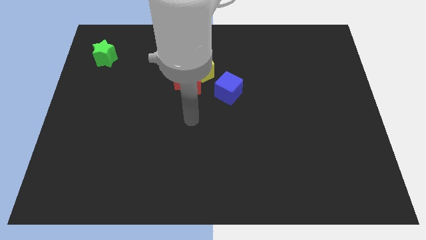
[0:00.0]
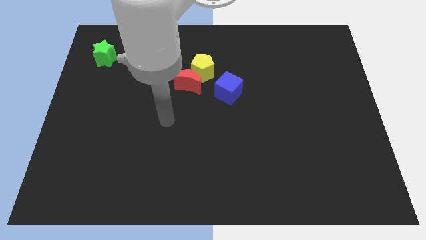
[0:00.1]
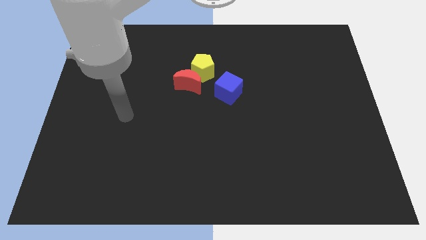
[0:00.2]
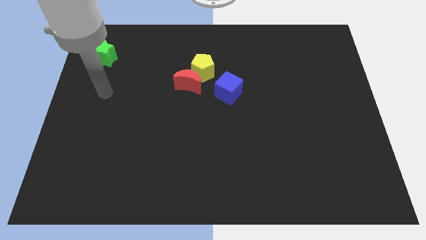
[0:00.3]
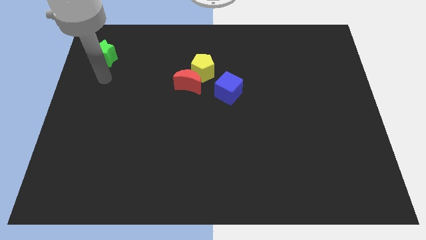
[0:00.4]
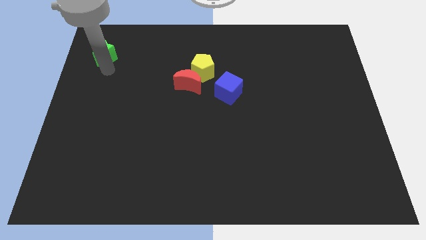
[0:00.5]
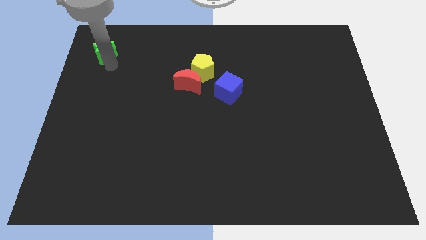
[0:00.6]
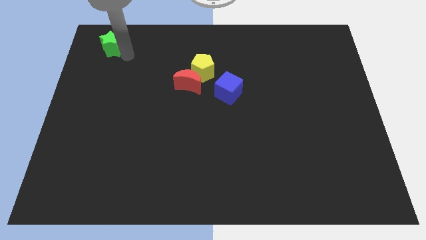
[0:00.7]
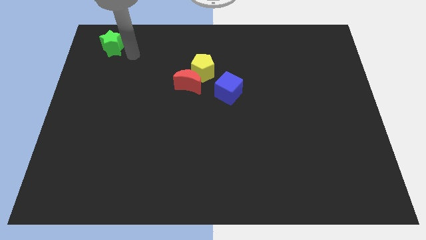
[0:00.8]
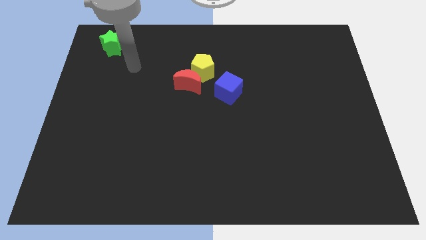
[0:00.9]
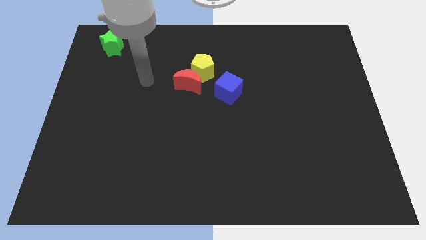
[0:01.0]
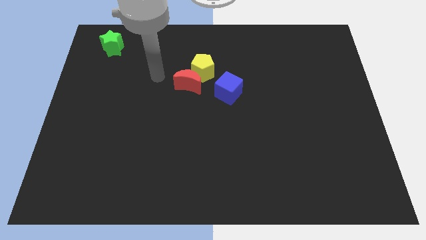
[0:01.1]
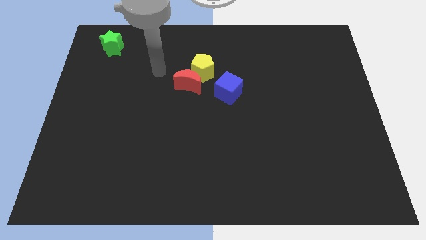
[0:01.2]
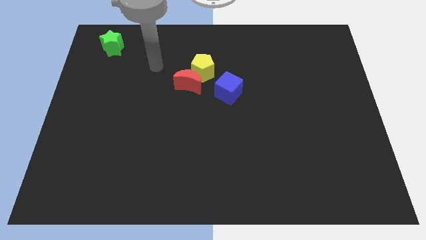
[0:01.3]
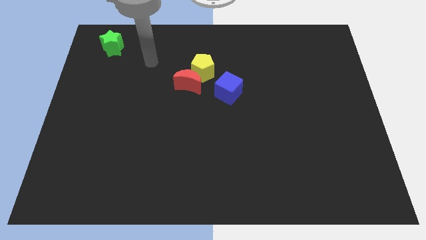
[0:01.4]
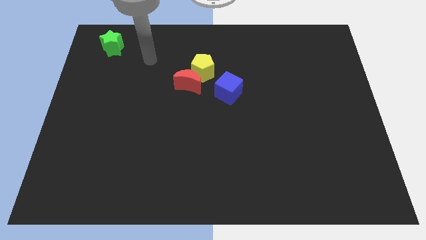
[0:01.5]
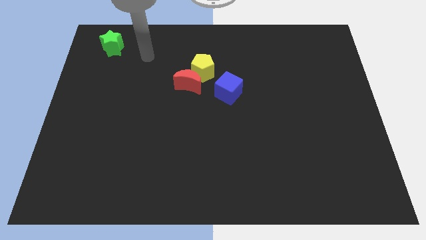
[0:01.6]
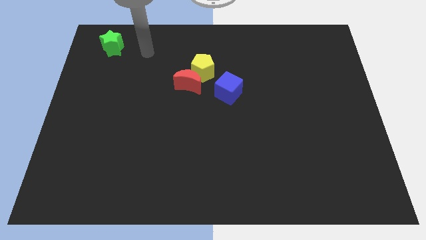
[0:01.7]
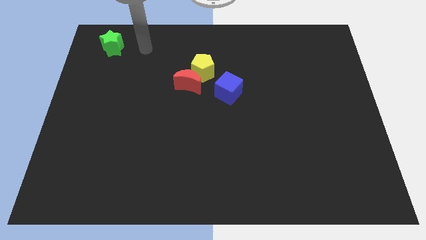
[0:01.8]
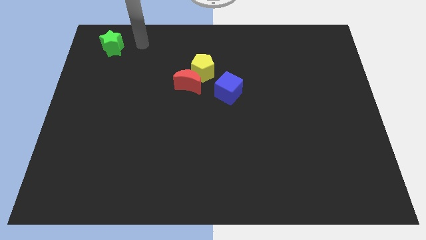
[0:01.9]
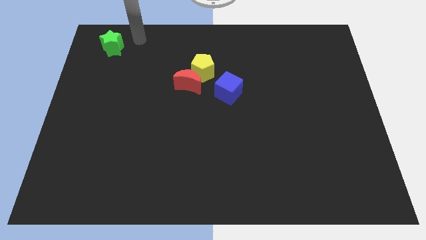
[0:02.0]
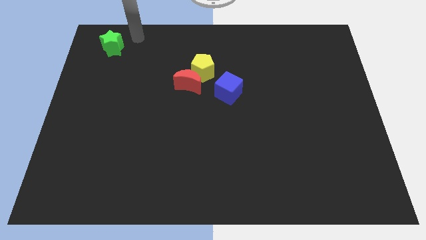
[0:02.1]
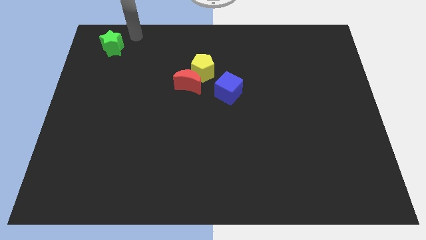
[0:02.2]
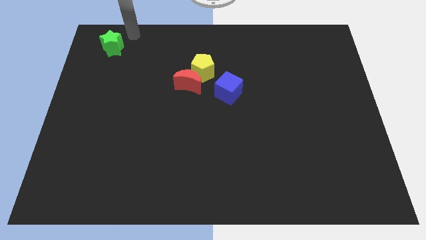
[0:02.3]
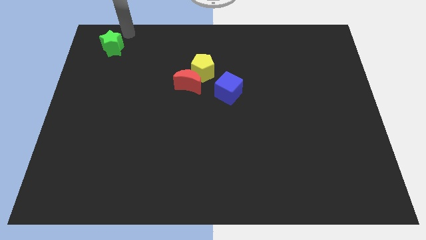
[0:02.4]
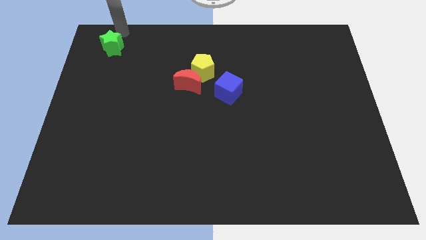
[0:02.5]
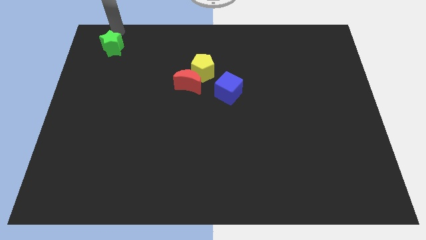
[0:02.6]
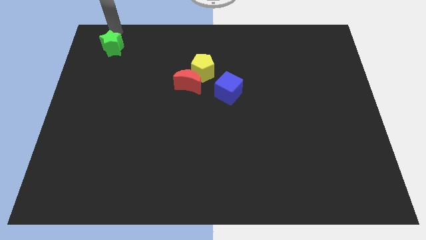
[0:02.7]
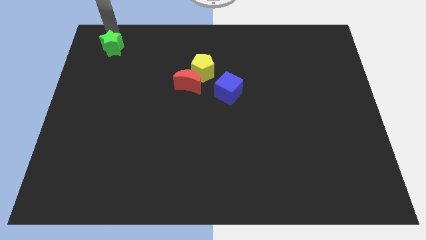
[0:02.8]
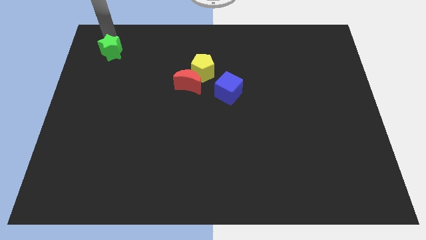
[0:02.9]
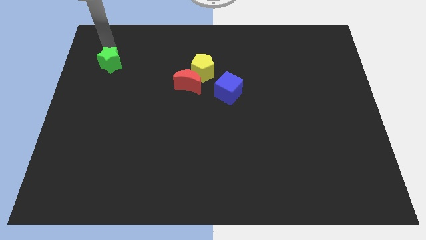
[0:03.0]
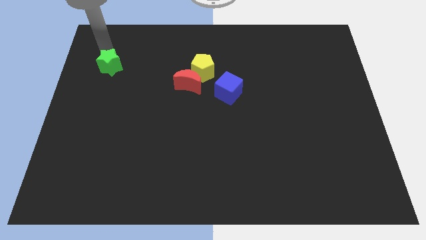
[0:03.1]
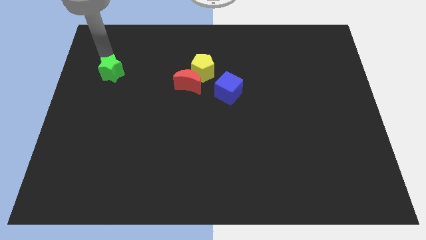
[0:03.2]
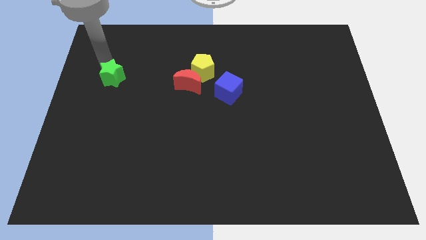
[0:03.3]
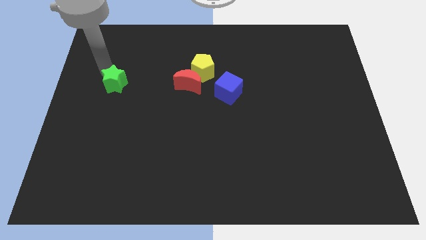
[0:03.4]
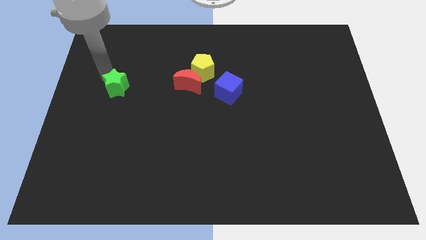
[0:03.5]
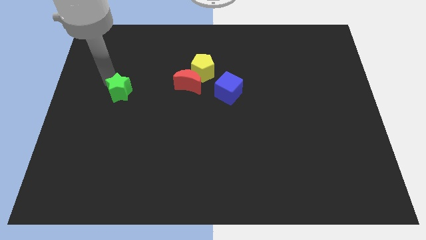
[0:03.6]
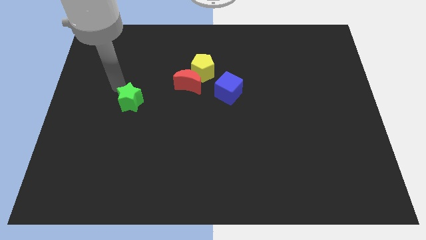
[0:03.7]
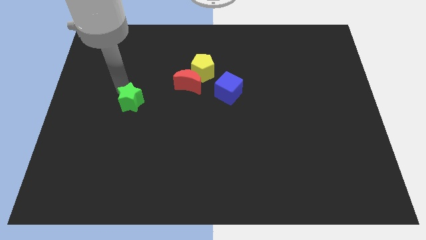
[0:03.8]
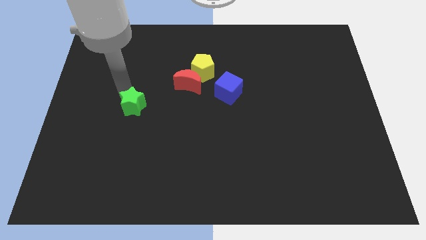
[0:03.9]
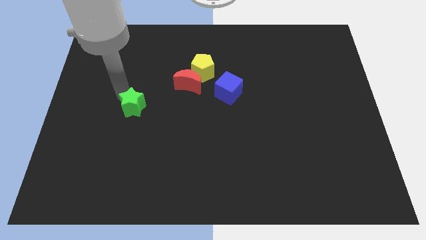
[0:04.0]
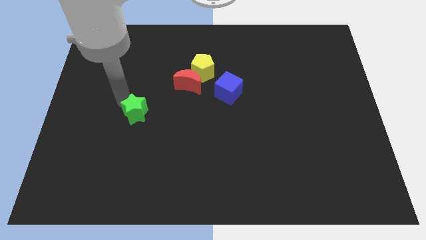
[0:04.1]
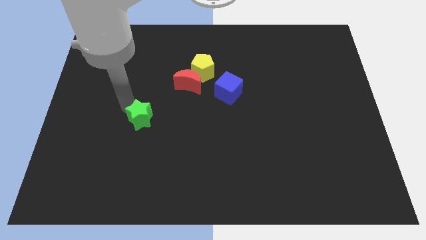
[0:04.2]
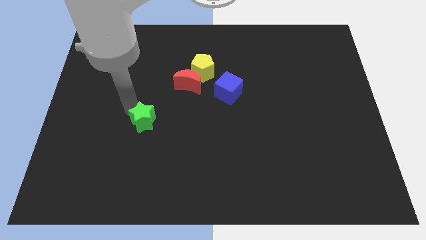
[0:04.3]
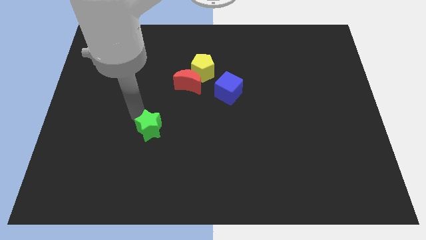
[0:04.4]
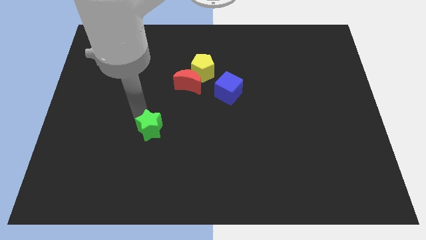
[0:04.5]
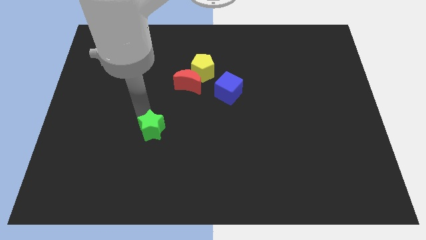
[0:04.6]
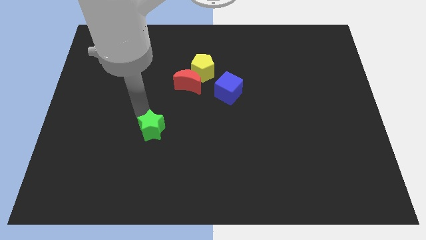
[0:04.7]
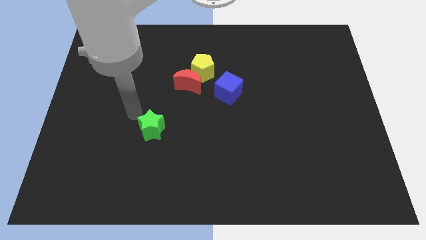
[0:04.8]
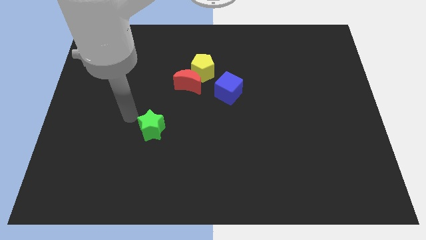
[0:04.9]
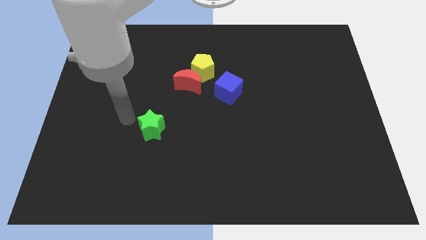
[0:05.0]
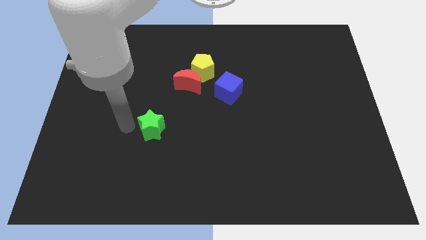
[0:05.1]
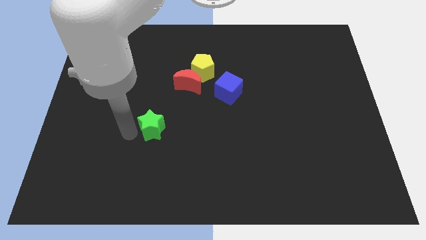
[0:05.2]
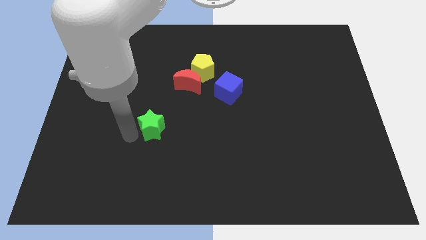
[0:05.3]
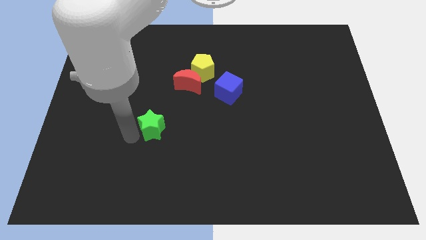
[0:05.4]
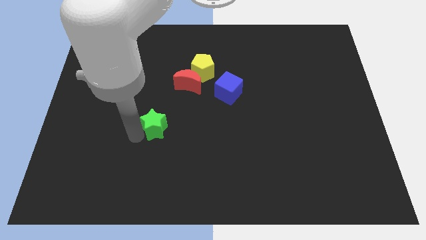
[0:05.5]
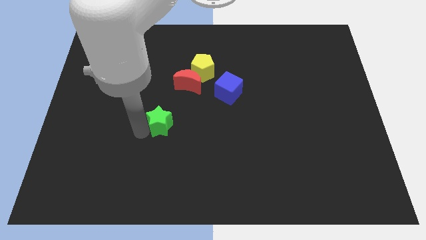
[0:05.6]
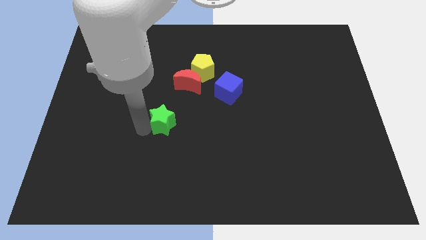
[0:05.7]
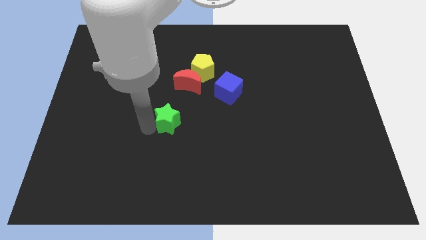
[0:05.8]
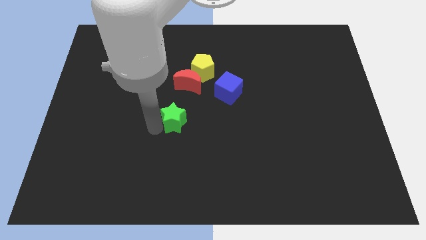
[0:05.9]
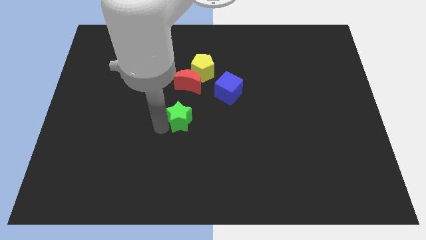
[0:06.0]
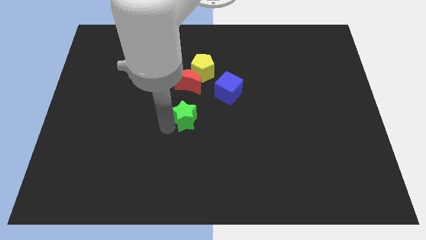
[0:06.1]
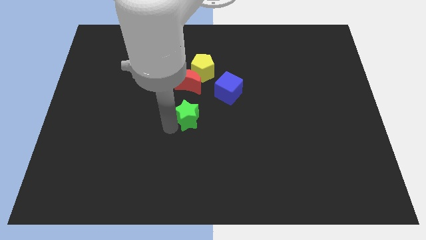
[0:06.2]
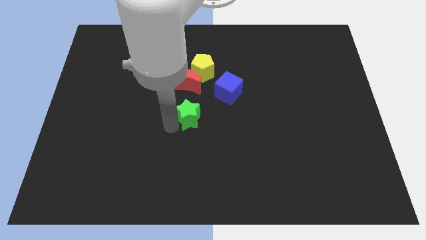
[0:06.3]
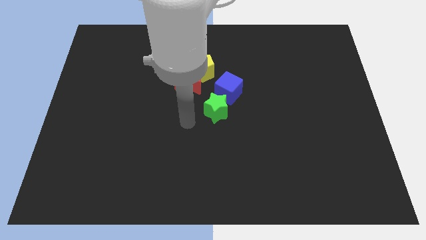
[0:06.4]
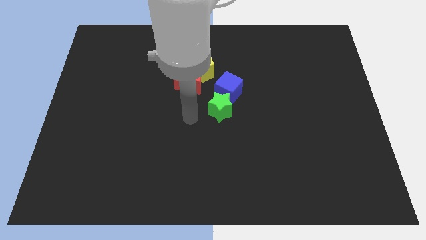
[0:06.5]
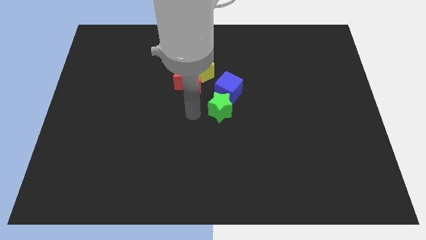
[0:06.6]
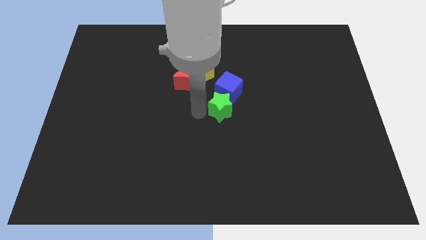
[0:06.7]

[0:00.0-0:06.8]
push the green block to the blue block

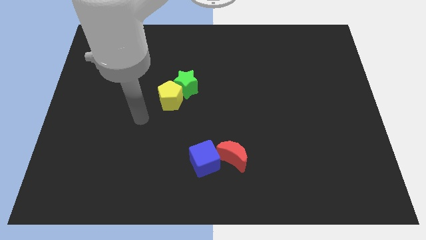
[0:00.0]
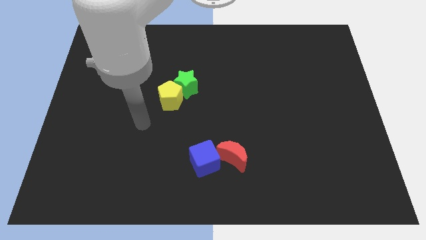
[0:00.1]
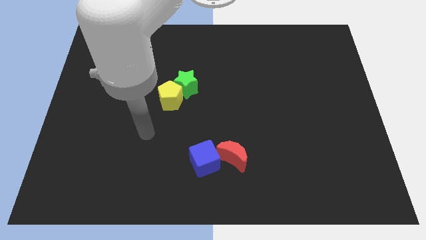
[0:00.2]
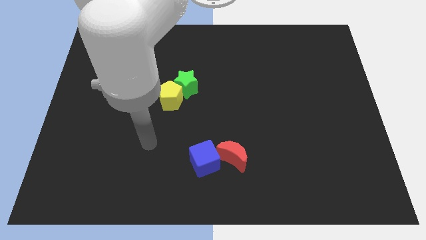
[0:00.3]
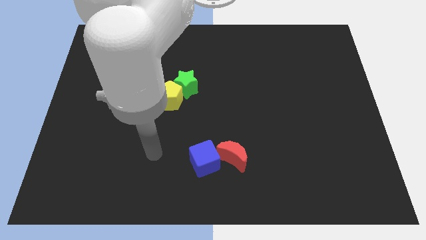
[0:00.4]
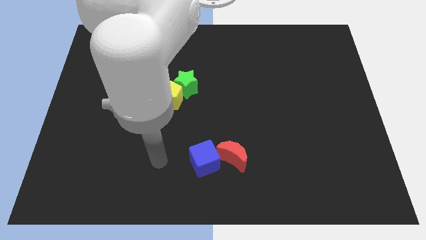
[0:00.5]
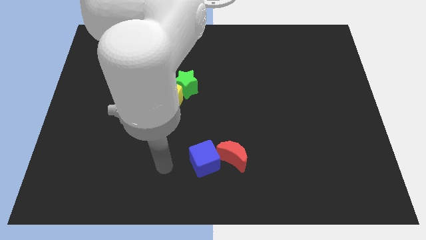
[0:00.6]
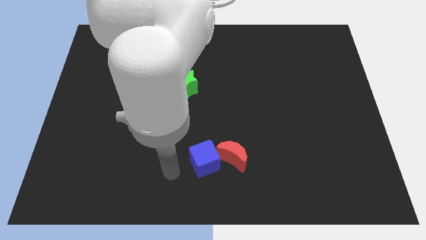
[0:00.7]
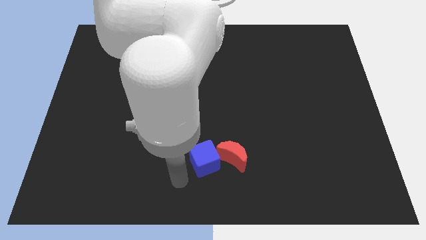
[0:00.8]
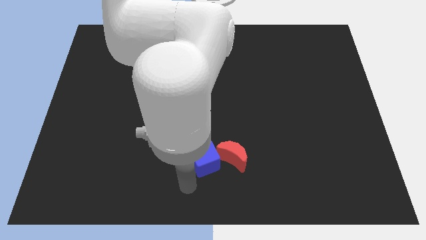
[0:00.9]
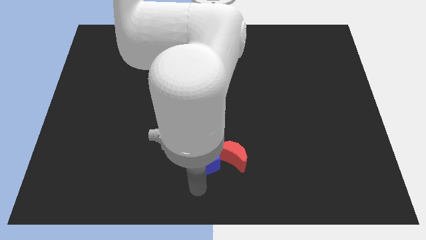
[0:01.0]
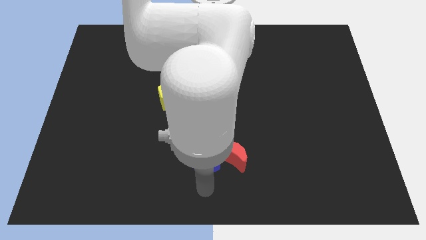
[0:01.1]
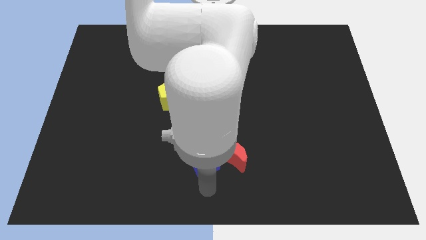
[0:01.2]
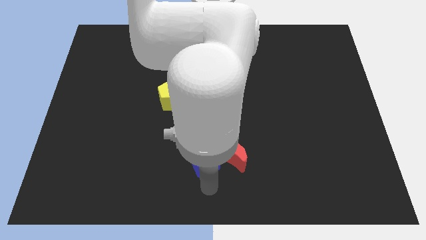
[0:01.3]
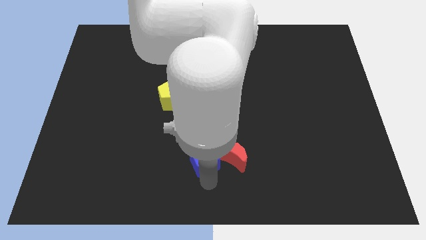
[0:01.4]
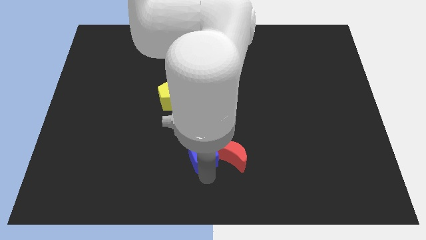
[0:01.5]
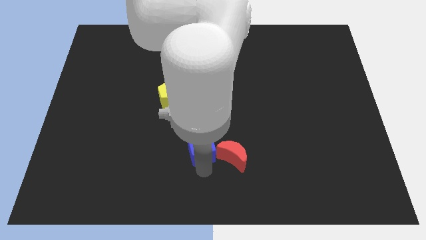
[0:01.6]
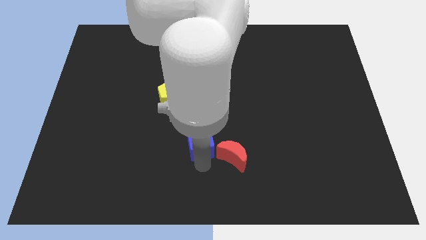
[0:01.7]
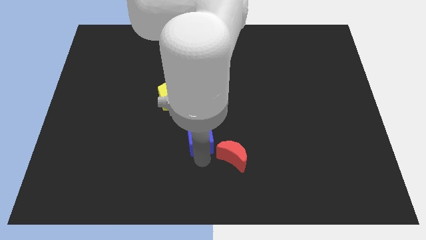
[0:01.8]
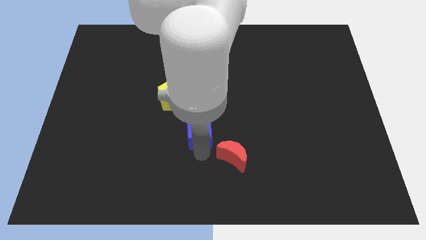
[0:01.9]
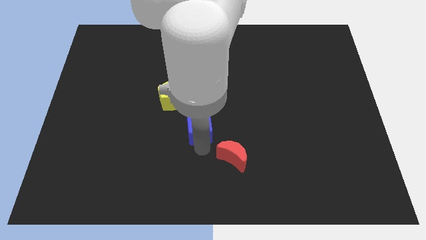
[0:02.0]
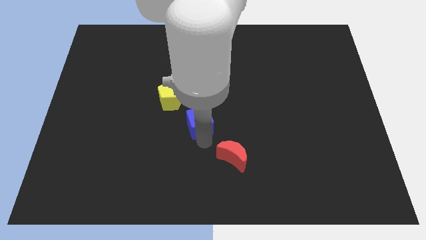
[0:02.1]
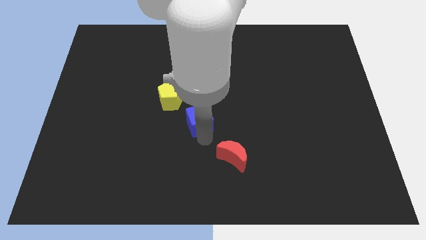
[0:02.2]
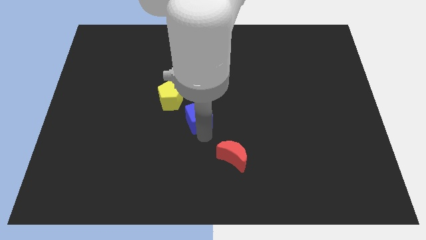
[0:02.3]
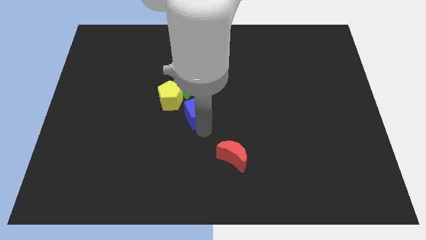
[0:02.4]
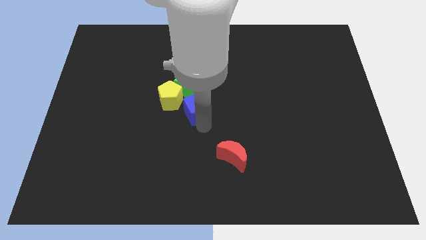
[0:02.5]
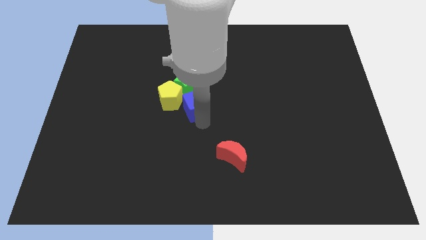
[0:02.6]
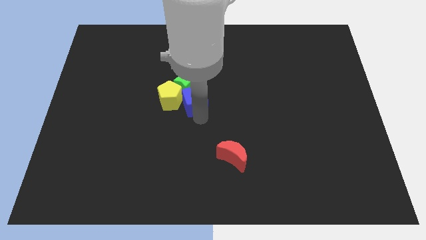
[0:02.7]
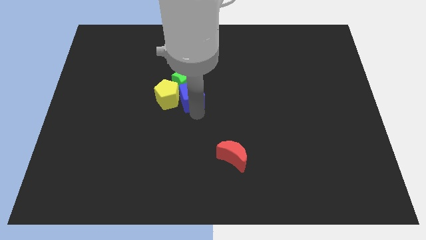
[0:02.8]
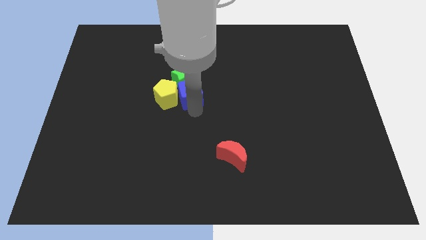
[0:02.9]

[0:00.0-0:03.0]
move the blue block to the green block
